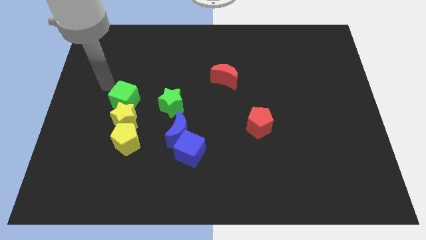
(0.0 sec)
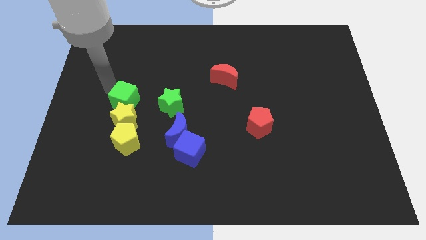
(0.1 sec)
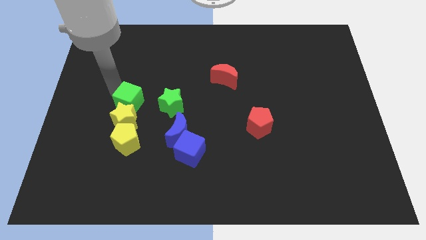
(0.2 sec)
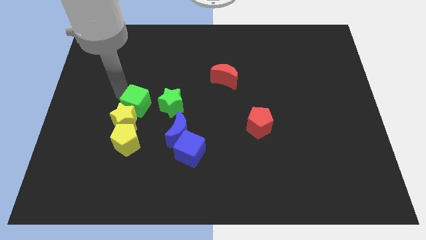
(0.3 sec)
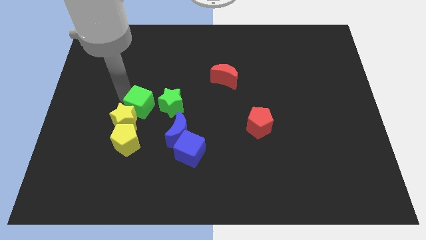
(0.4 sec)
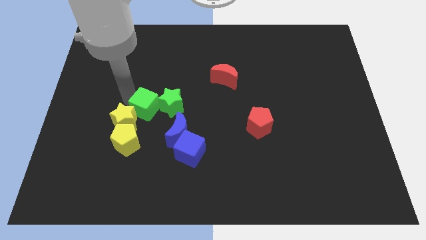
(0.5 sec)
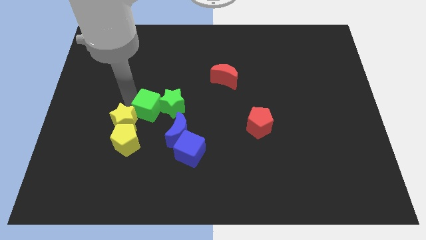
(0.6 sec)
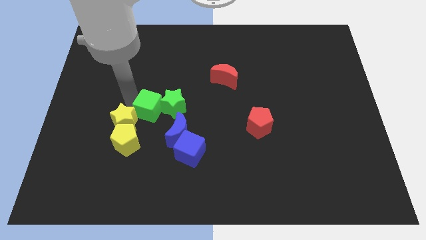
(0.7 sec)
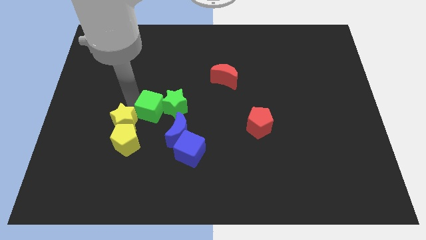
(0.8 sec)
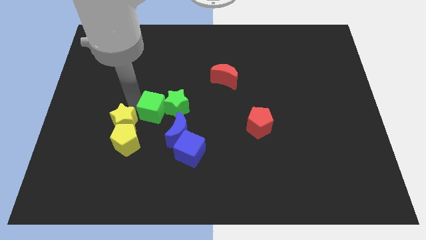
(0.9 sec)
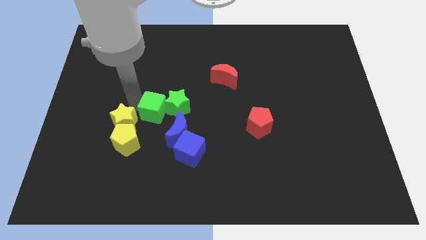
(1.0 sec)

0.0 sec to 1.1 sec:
push the green cube into the green star

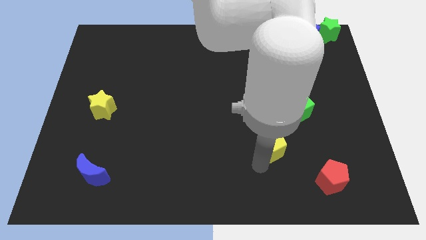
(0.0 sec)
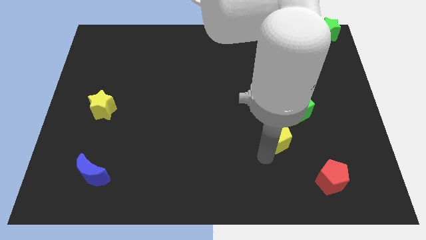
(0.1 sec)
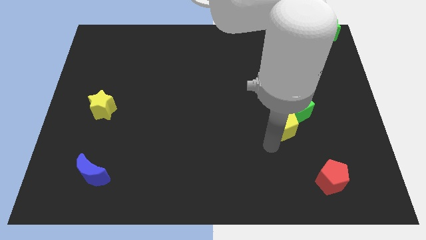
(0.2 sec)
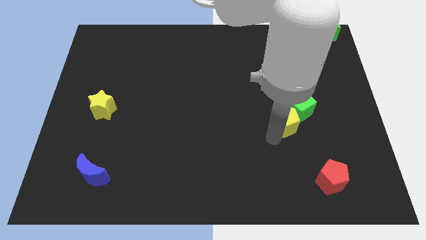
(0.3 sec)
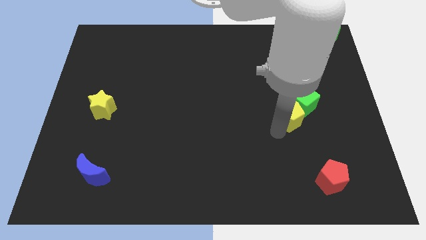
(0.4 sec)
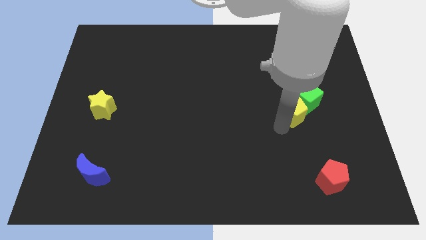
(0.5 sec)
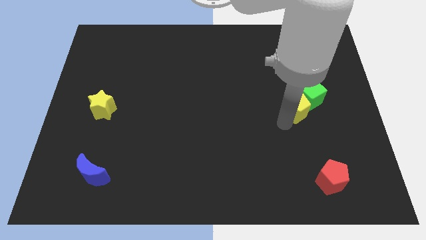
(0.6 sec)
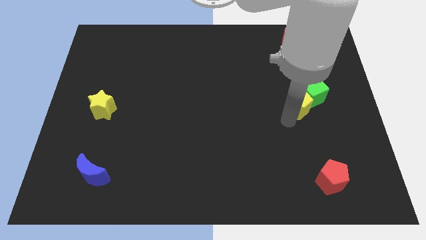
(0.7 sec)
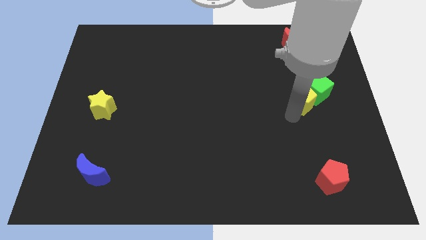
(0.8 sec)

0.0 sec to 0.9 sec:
push the yellow pentagon to the left of the green cube

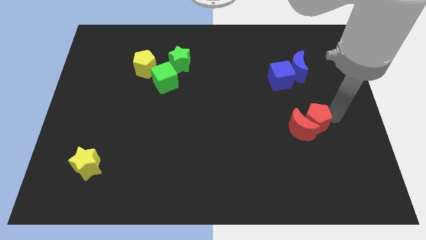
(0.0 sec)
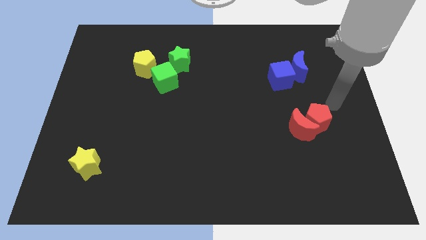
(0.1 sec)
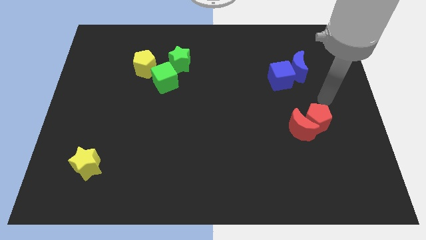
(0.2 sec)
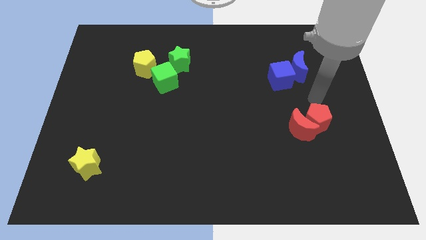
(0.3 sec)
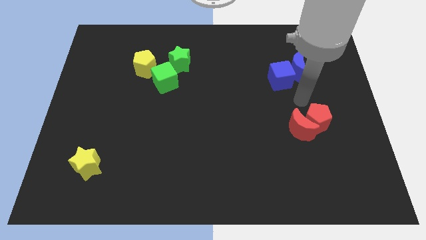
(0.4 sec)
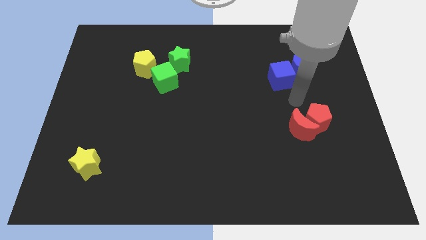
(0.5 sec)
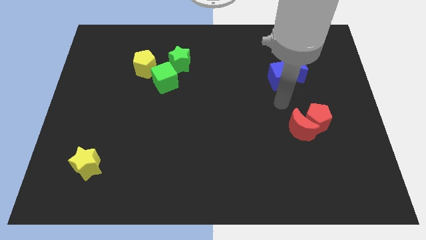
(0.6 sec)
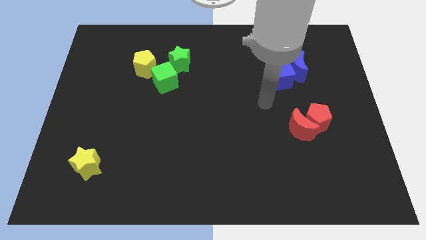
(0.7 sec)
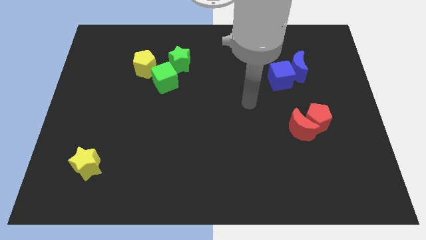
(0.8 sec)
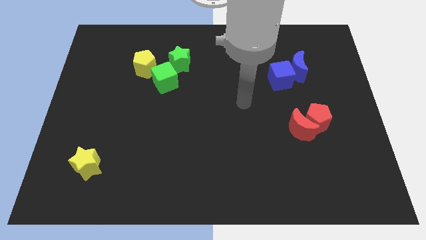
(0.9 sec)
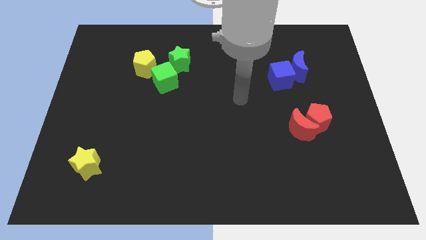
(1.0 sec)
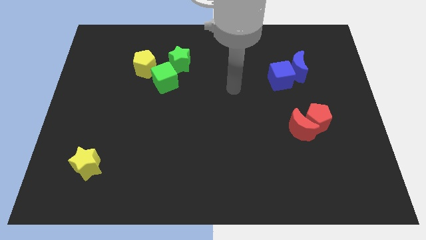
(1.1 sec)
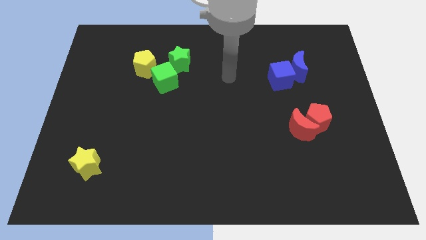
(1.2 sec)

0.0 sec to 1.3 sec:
move the arm away from the red pentagon

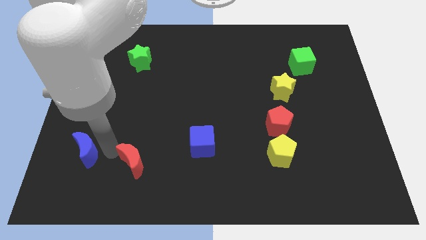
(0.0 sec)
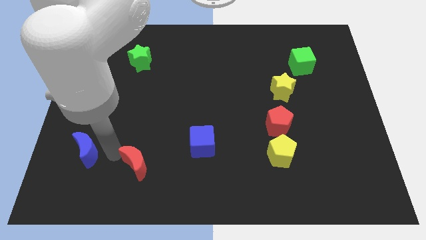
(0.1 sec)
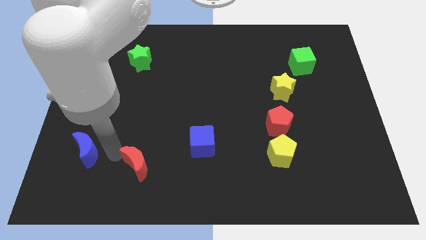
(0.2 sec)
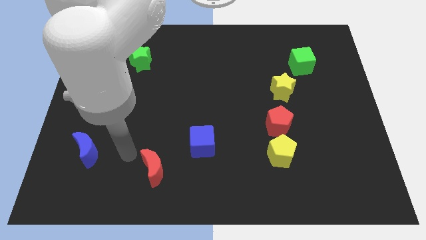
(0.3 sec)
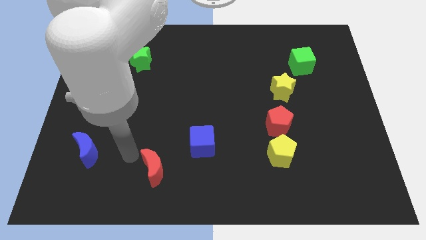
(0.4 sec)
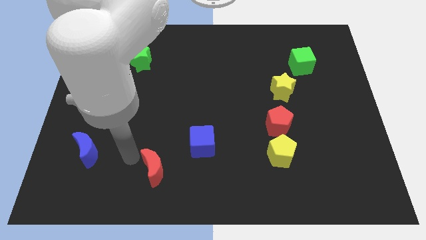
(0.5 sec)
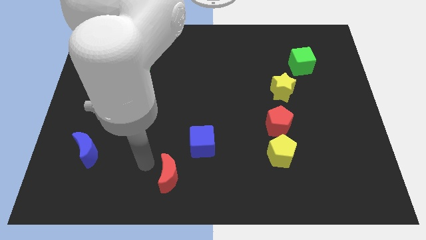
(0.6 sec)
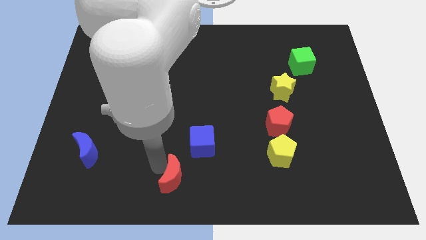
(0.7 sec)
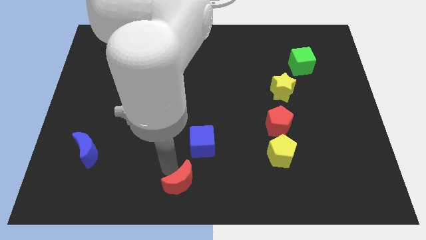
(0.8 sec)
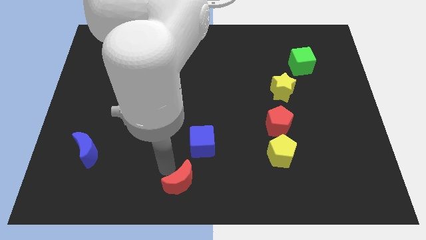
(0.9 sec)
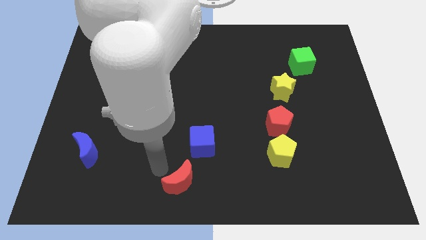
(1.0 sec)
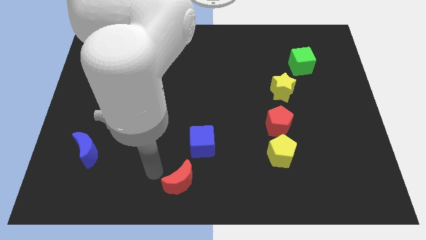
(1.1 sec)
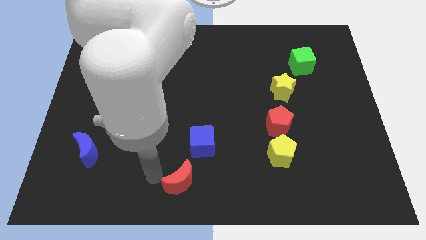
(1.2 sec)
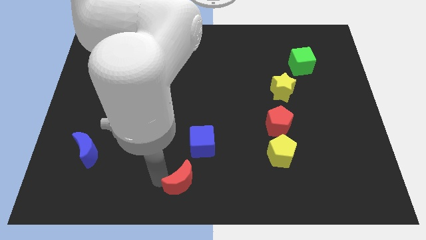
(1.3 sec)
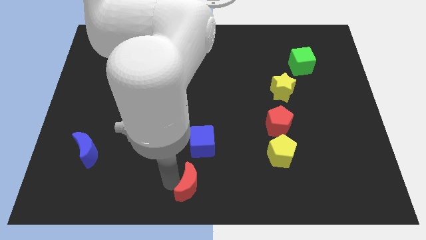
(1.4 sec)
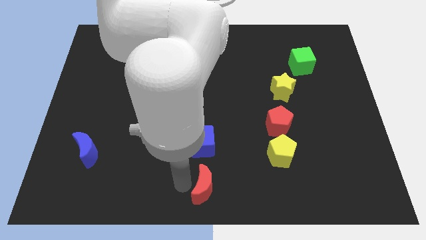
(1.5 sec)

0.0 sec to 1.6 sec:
push red crescent below blue cube

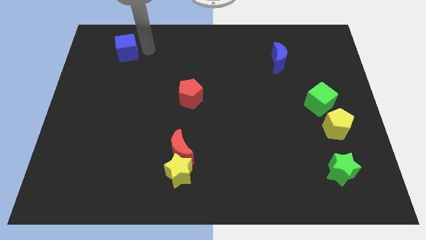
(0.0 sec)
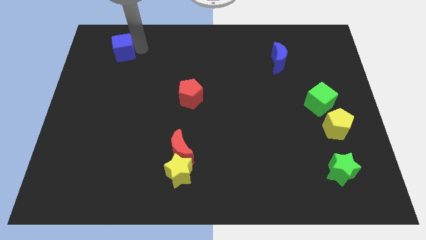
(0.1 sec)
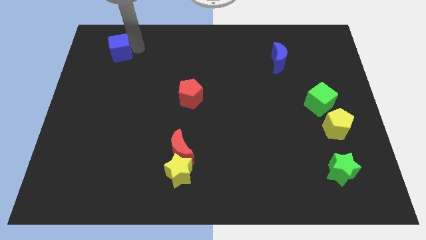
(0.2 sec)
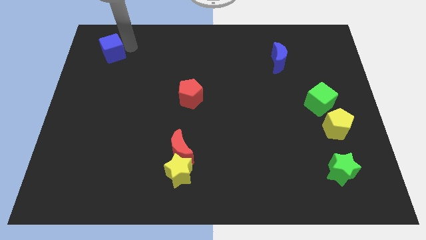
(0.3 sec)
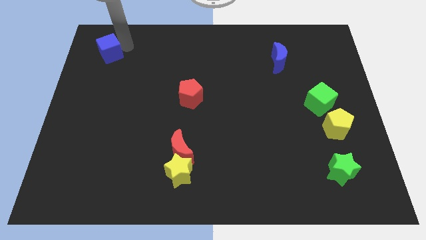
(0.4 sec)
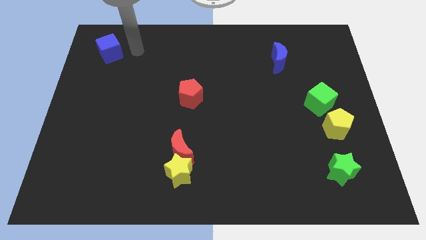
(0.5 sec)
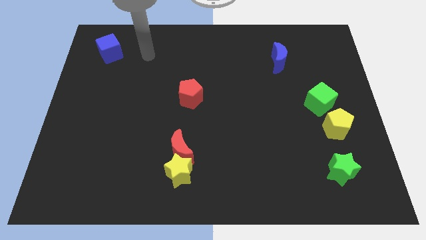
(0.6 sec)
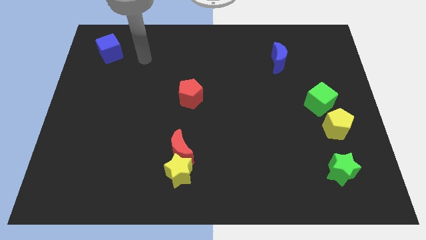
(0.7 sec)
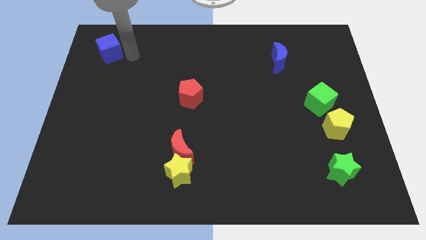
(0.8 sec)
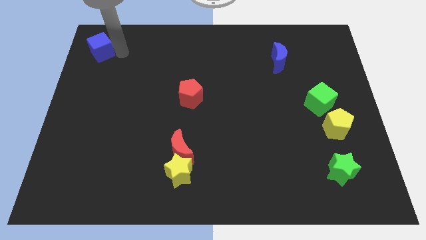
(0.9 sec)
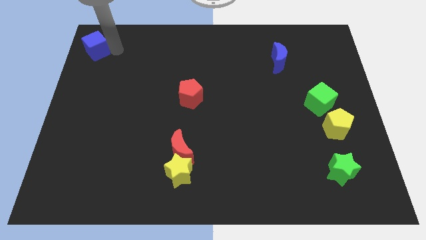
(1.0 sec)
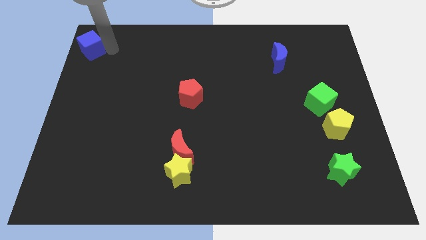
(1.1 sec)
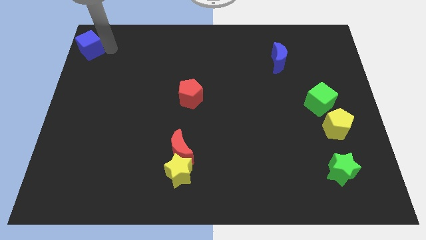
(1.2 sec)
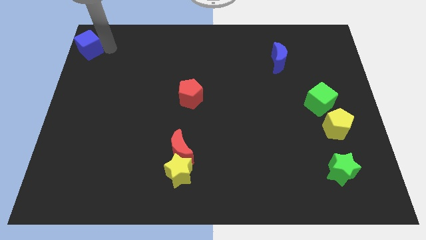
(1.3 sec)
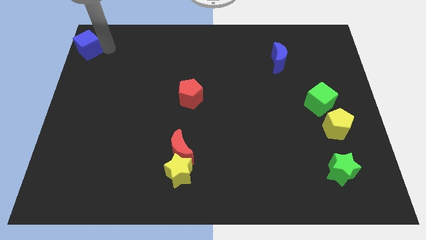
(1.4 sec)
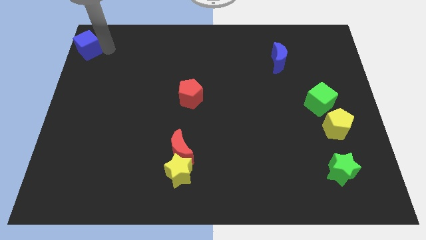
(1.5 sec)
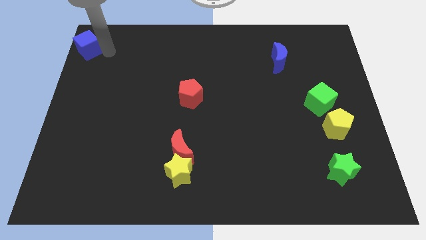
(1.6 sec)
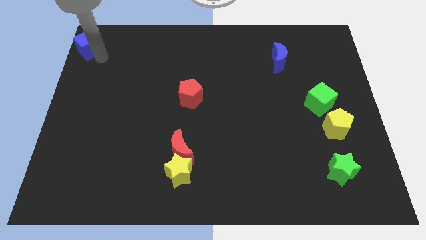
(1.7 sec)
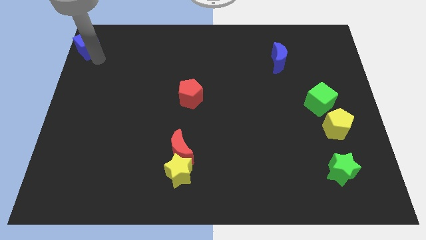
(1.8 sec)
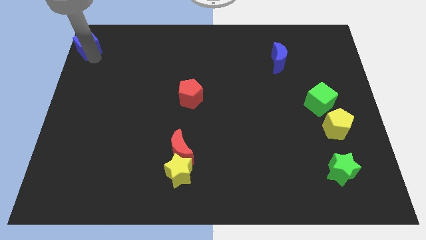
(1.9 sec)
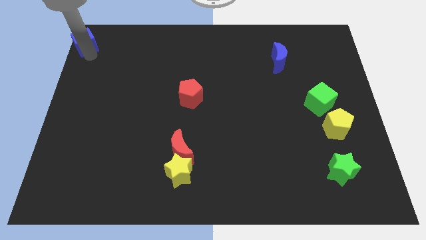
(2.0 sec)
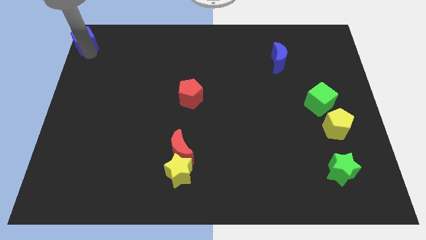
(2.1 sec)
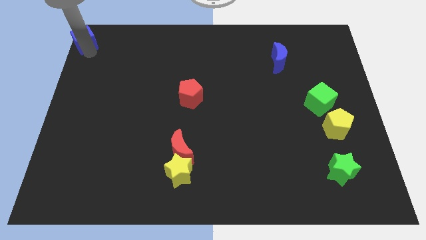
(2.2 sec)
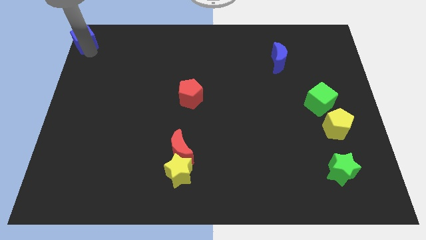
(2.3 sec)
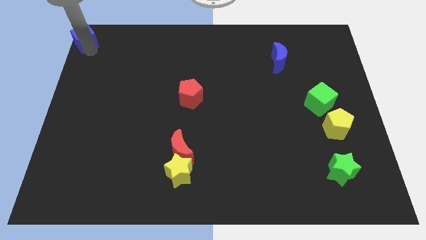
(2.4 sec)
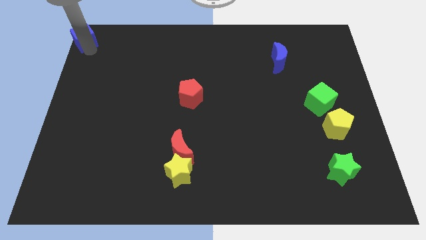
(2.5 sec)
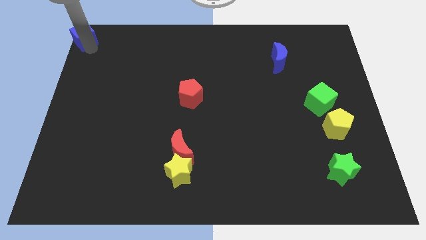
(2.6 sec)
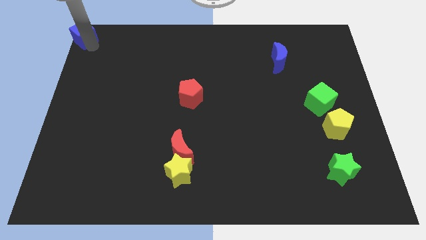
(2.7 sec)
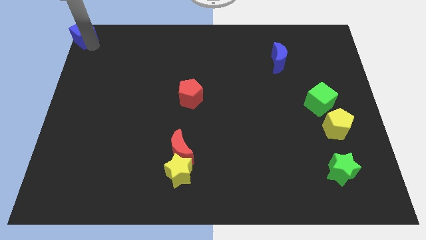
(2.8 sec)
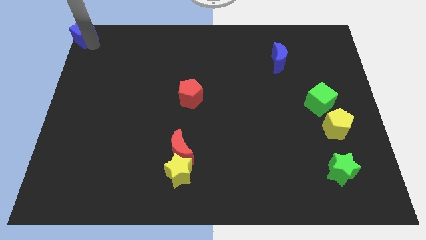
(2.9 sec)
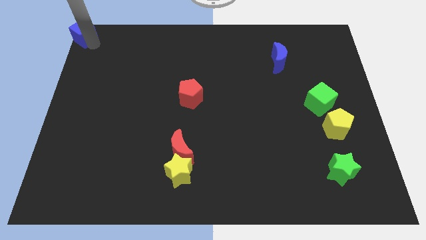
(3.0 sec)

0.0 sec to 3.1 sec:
move the blue cube to the top left corner

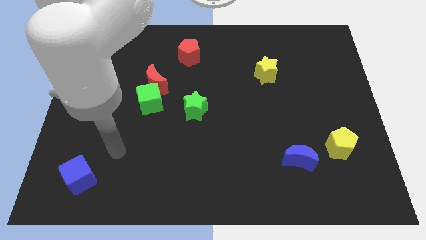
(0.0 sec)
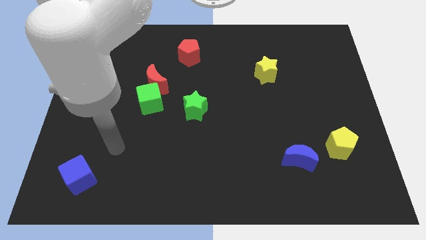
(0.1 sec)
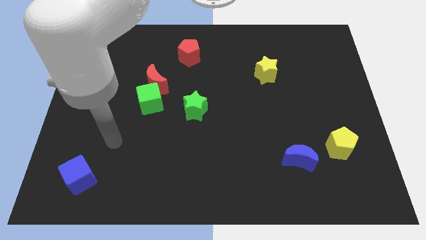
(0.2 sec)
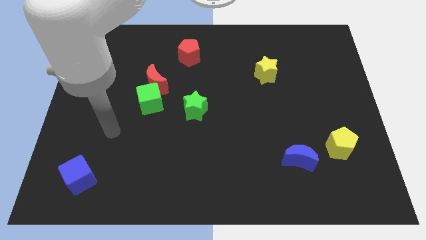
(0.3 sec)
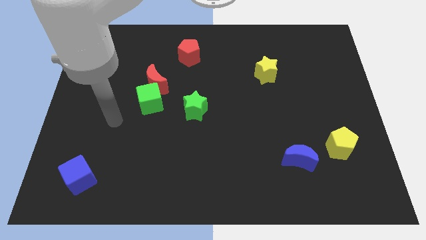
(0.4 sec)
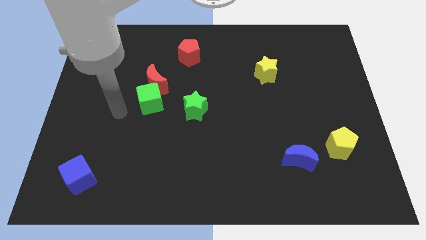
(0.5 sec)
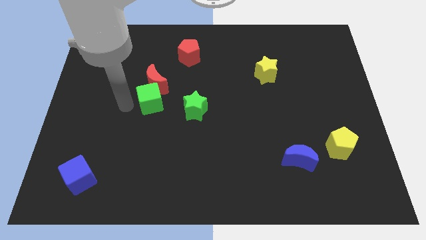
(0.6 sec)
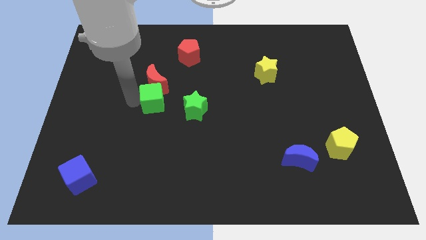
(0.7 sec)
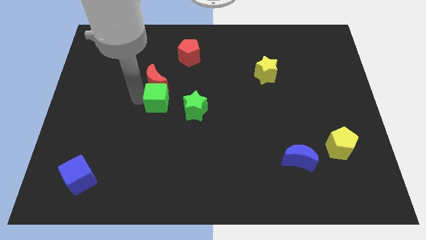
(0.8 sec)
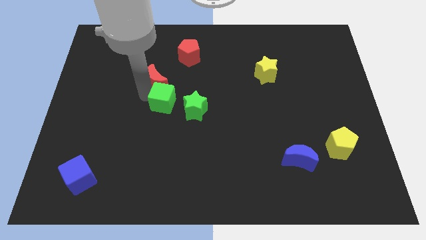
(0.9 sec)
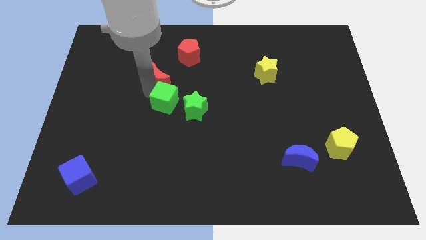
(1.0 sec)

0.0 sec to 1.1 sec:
move arm into the red crescent and green cube

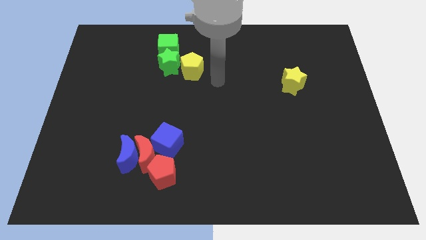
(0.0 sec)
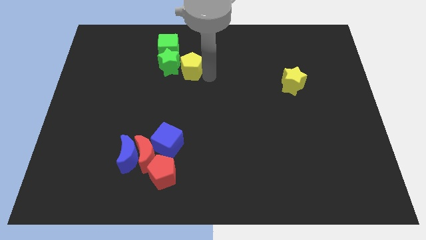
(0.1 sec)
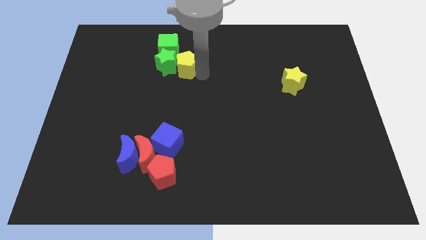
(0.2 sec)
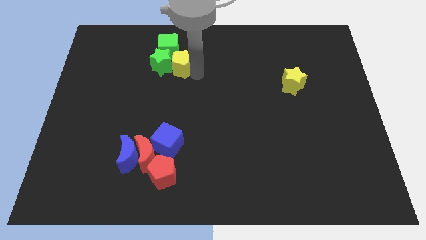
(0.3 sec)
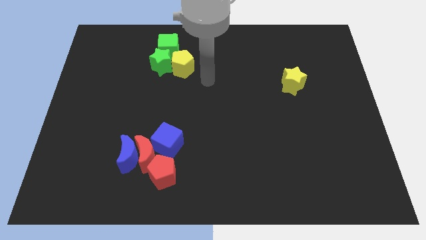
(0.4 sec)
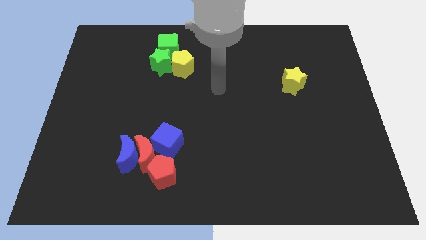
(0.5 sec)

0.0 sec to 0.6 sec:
push the yellow pentagon into green star
